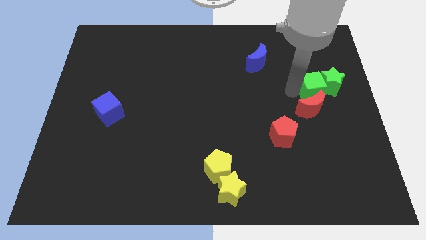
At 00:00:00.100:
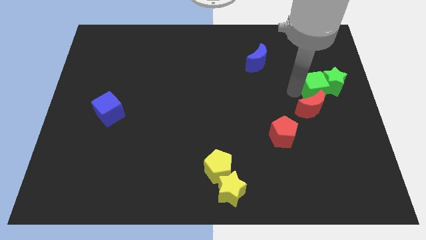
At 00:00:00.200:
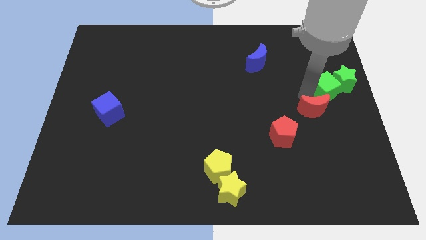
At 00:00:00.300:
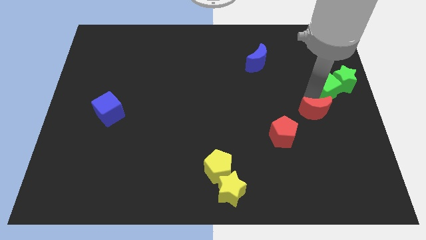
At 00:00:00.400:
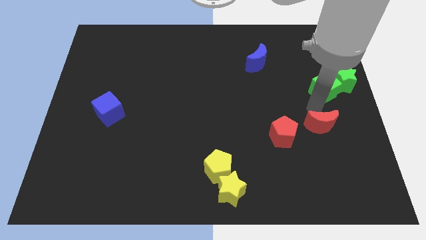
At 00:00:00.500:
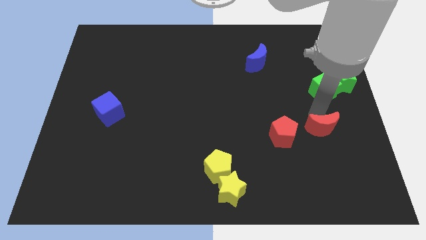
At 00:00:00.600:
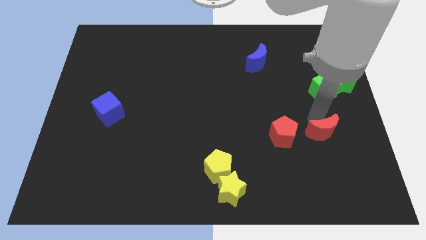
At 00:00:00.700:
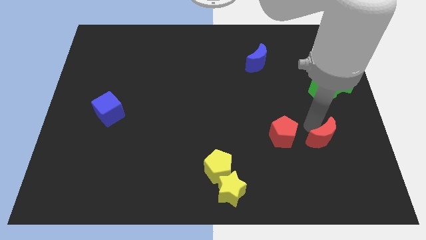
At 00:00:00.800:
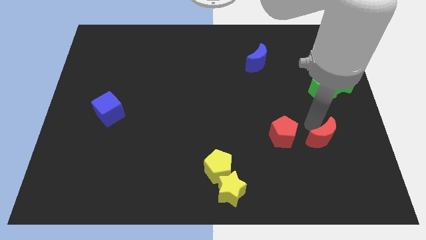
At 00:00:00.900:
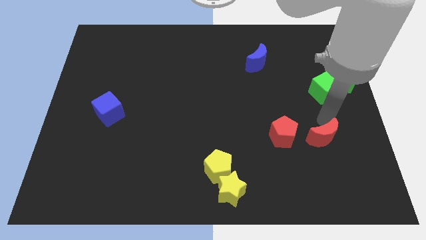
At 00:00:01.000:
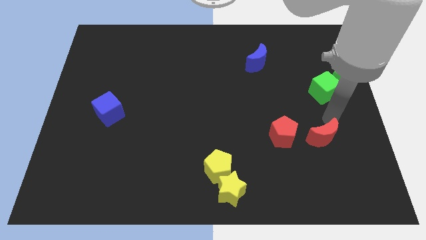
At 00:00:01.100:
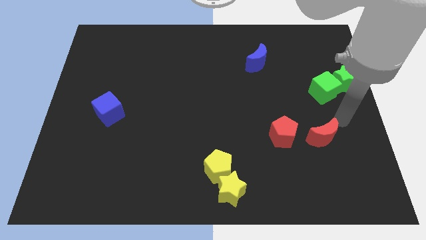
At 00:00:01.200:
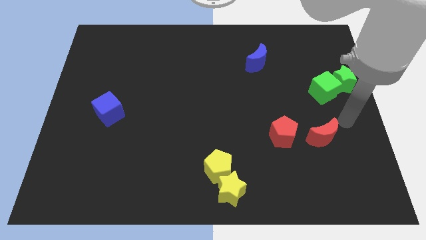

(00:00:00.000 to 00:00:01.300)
place the red moon to the right of the red pentagon

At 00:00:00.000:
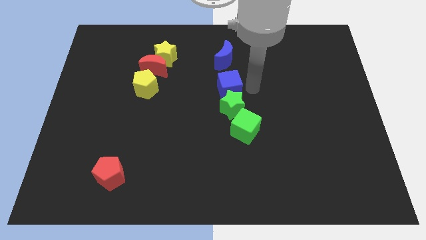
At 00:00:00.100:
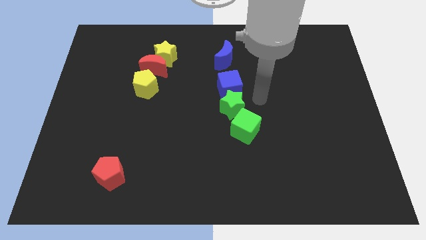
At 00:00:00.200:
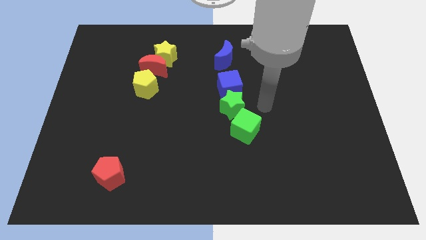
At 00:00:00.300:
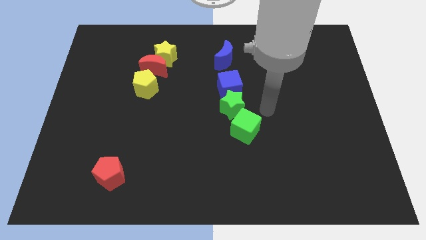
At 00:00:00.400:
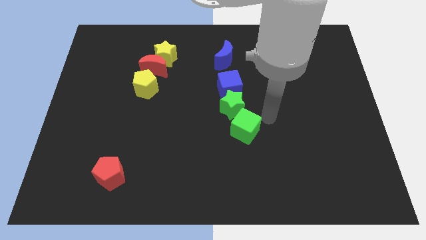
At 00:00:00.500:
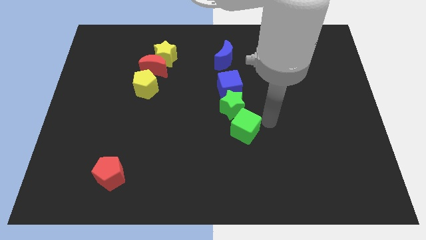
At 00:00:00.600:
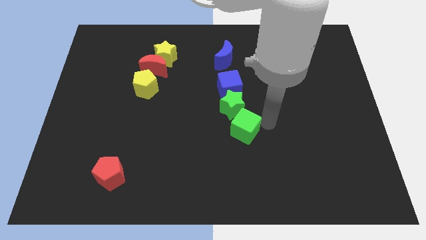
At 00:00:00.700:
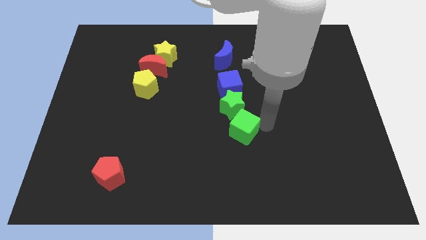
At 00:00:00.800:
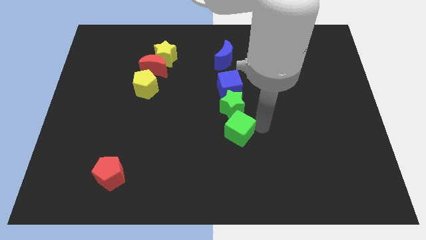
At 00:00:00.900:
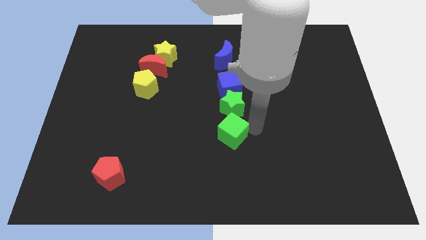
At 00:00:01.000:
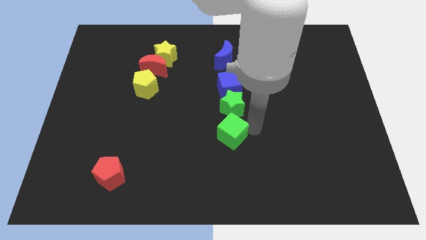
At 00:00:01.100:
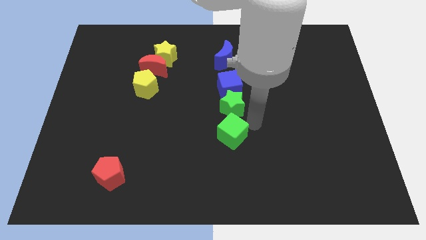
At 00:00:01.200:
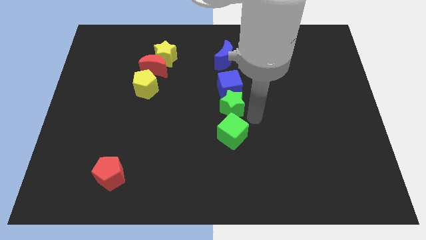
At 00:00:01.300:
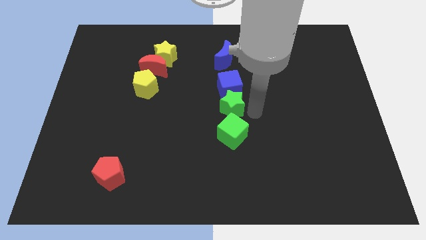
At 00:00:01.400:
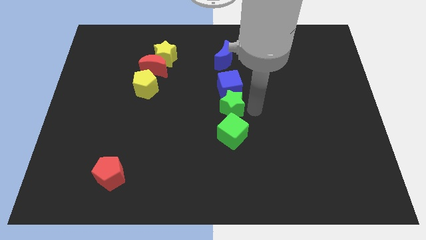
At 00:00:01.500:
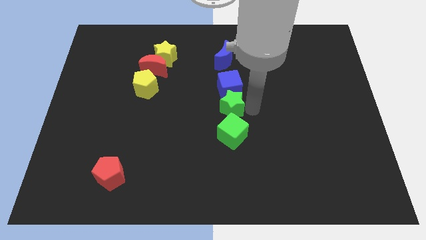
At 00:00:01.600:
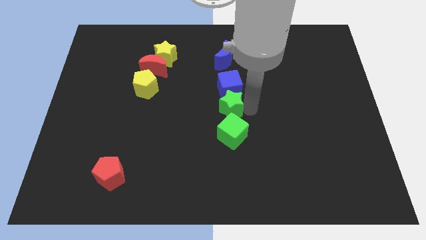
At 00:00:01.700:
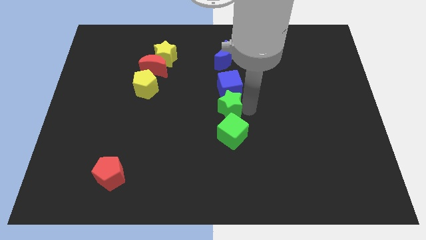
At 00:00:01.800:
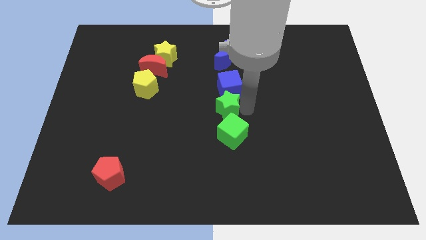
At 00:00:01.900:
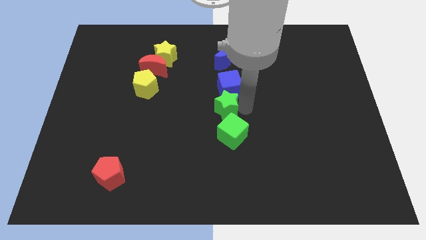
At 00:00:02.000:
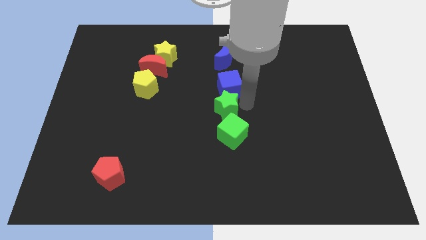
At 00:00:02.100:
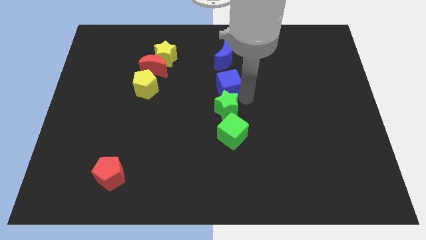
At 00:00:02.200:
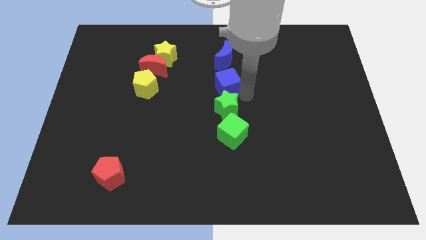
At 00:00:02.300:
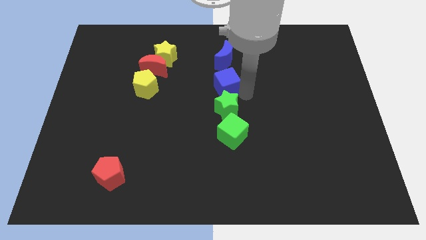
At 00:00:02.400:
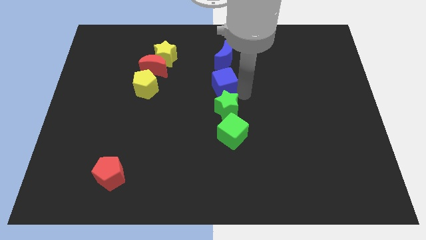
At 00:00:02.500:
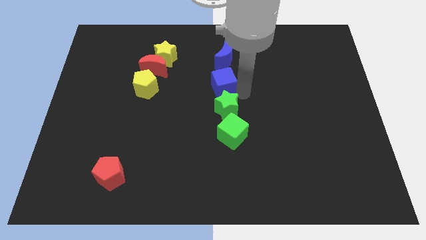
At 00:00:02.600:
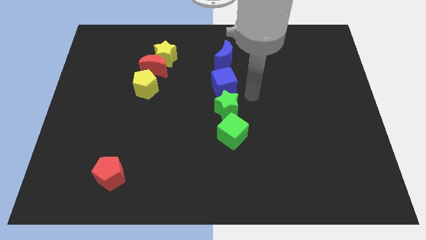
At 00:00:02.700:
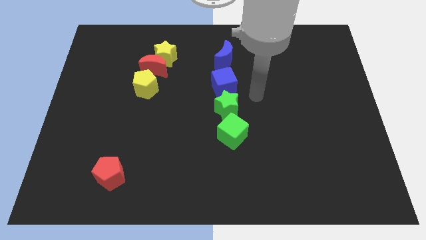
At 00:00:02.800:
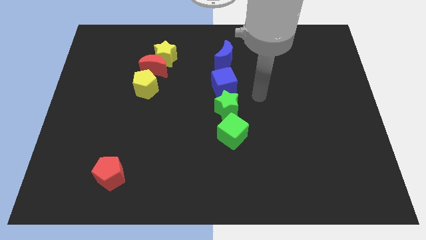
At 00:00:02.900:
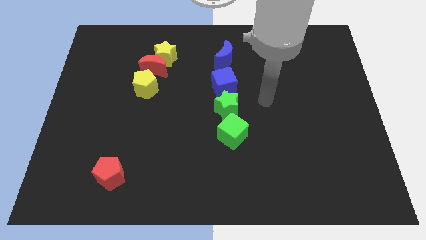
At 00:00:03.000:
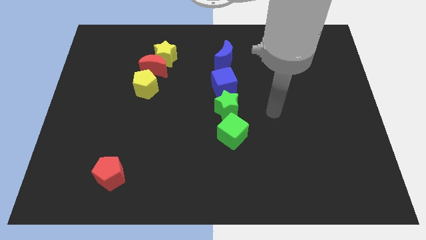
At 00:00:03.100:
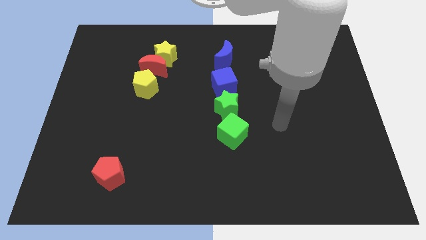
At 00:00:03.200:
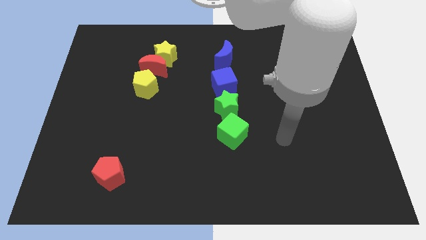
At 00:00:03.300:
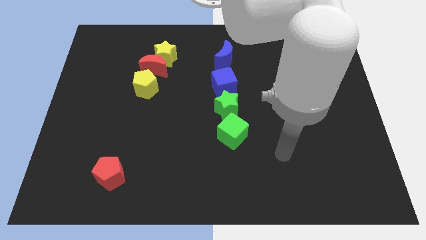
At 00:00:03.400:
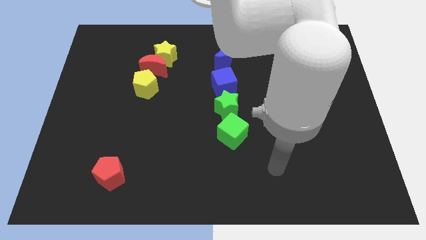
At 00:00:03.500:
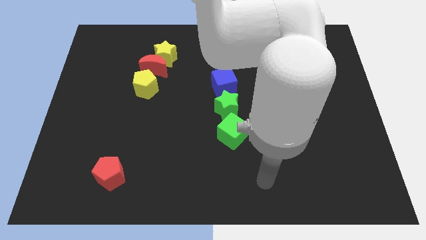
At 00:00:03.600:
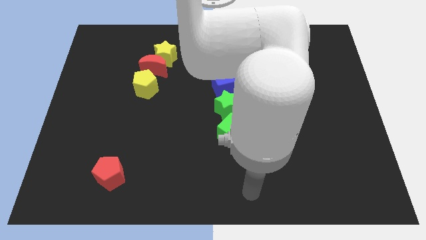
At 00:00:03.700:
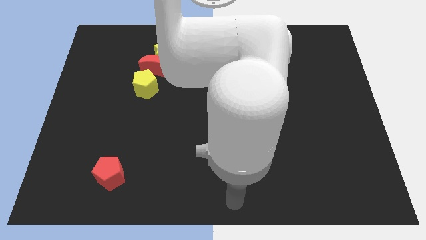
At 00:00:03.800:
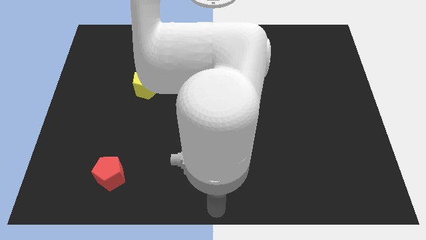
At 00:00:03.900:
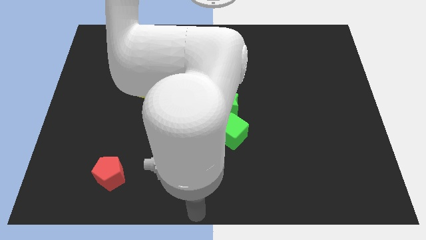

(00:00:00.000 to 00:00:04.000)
adjust the blue and green blocks in a vertical line

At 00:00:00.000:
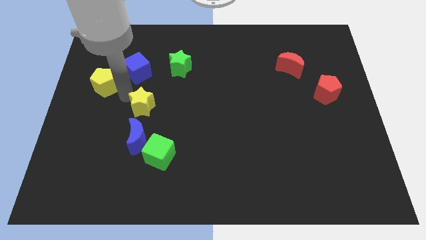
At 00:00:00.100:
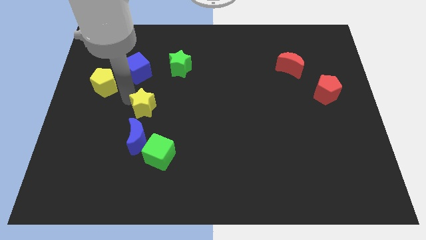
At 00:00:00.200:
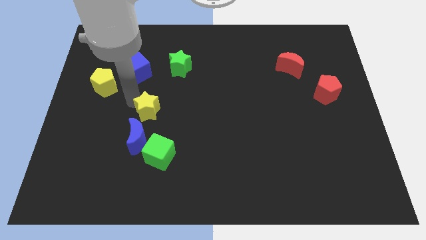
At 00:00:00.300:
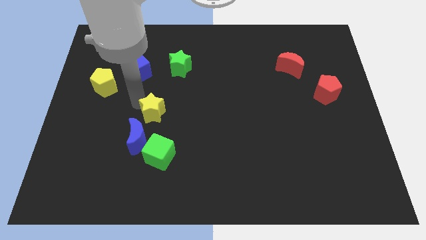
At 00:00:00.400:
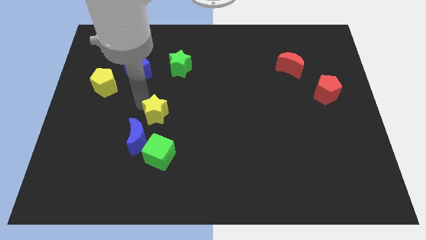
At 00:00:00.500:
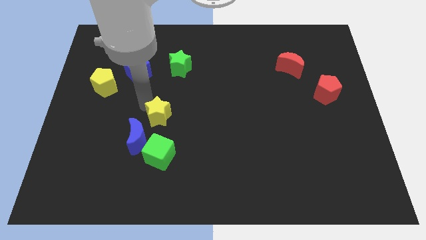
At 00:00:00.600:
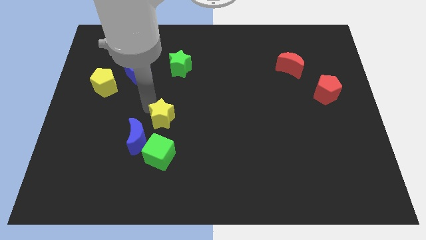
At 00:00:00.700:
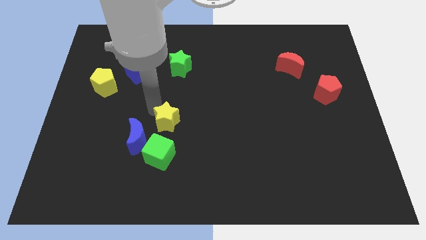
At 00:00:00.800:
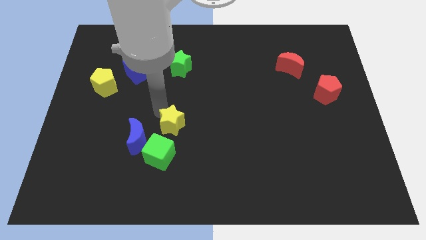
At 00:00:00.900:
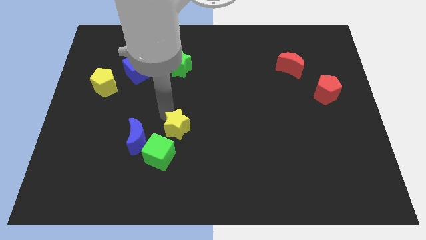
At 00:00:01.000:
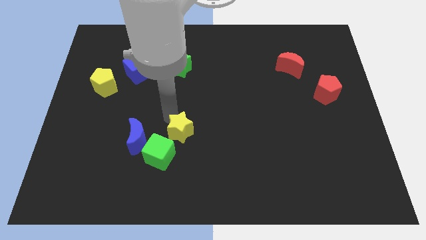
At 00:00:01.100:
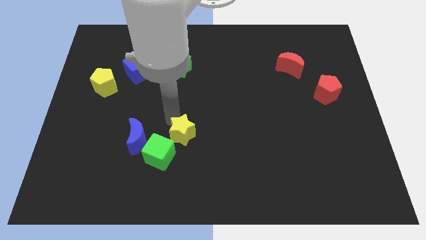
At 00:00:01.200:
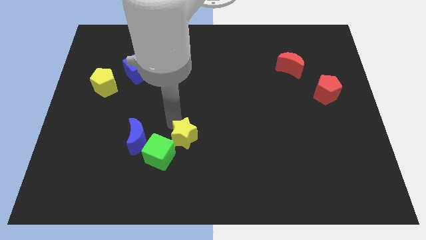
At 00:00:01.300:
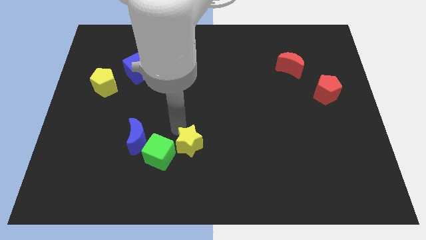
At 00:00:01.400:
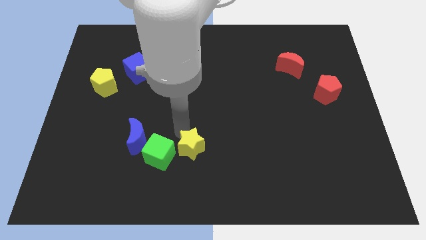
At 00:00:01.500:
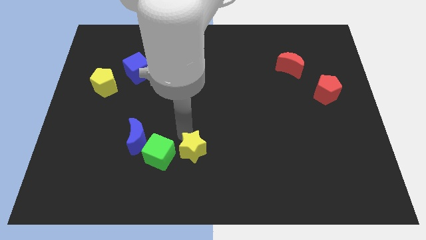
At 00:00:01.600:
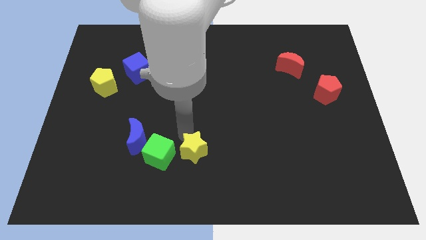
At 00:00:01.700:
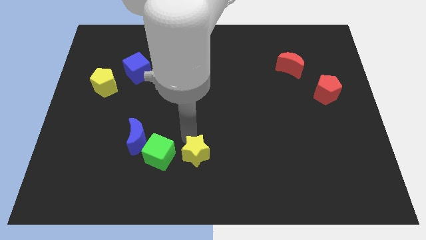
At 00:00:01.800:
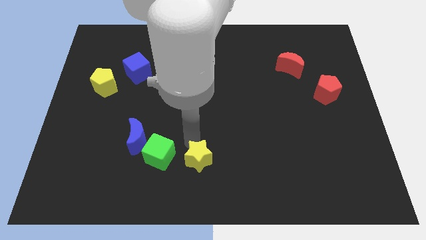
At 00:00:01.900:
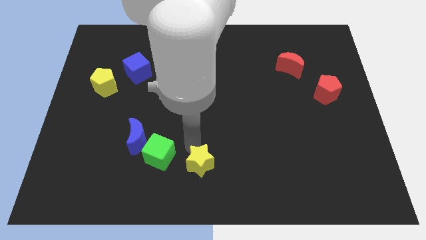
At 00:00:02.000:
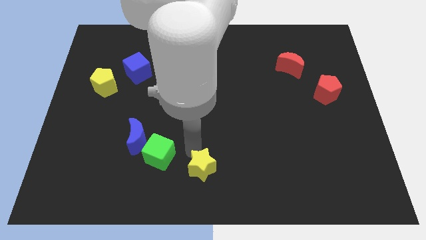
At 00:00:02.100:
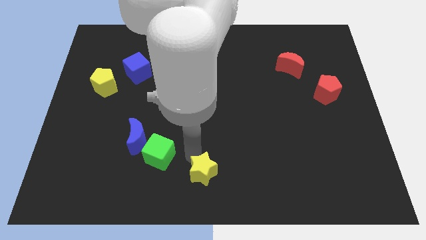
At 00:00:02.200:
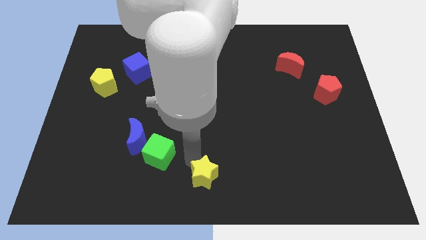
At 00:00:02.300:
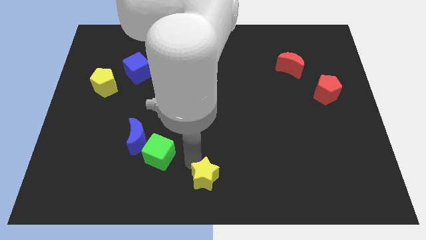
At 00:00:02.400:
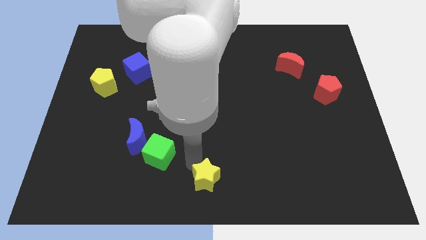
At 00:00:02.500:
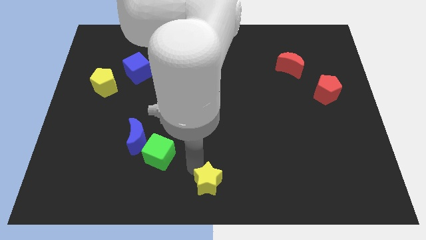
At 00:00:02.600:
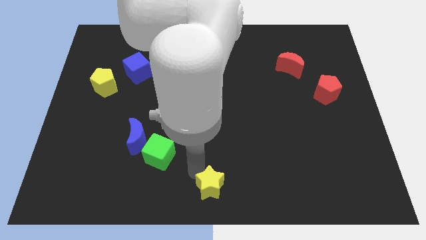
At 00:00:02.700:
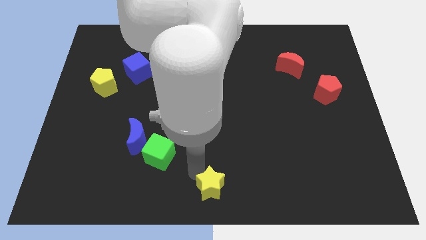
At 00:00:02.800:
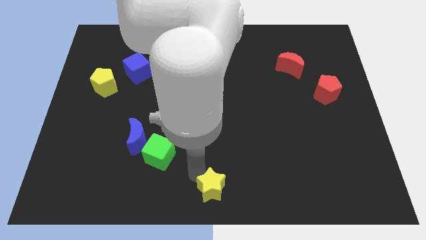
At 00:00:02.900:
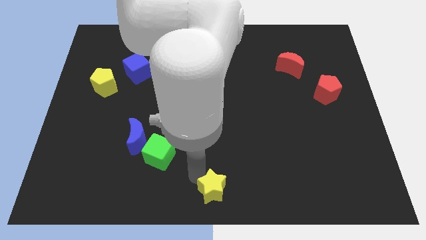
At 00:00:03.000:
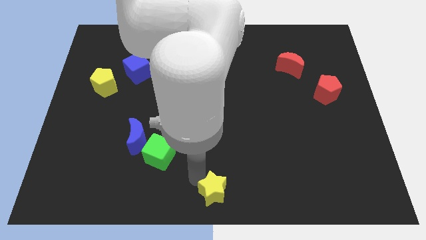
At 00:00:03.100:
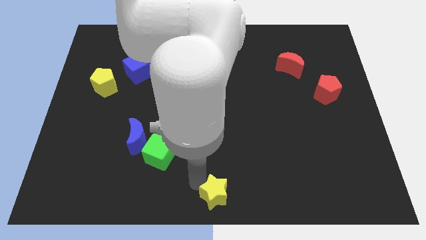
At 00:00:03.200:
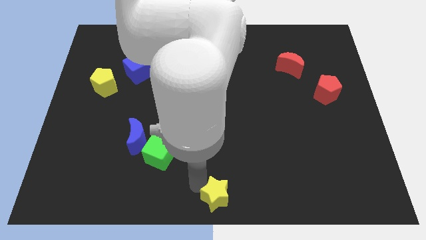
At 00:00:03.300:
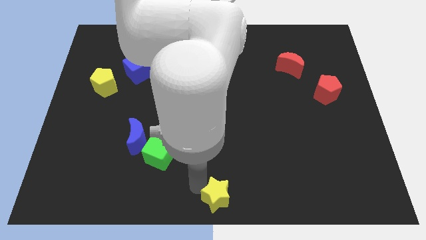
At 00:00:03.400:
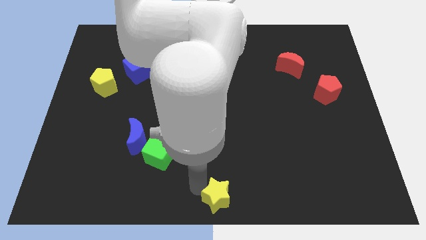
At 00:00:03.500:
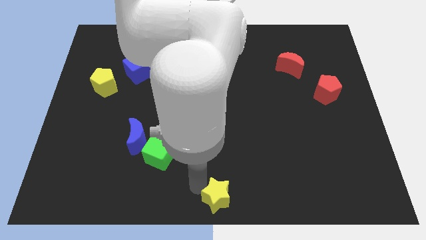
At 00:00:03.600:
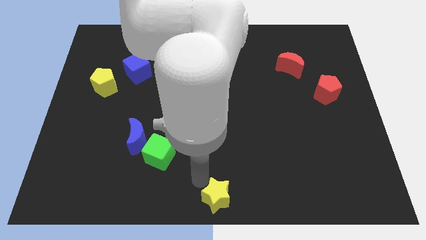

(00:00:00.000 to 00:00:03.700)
move the yellow star downwards to the bottom center of the board
